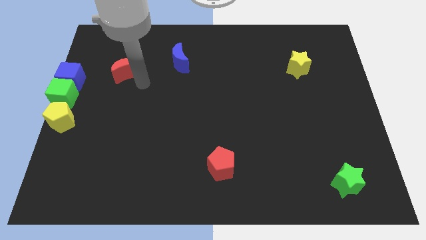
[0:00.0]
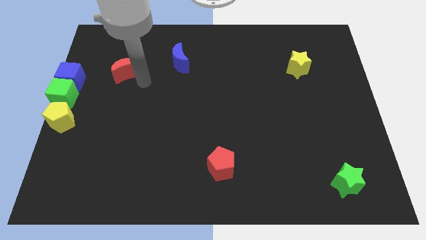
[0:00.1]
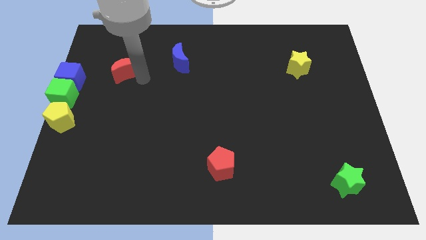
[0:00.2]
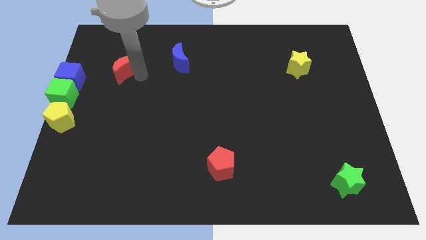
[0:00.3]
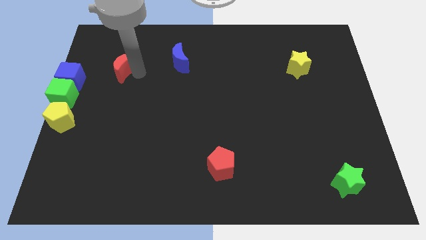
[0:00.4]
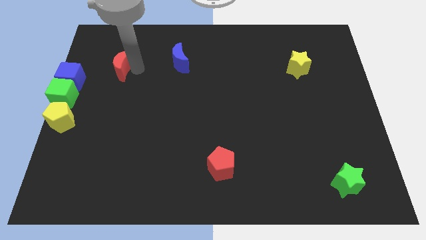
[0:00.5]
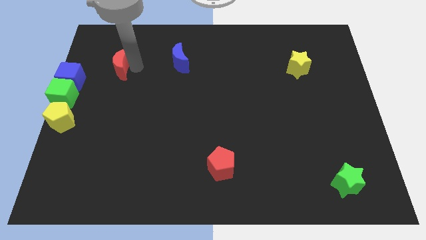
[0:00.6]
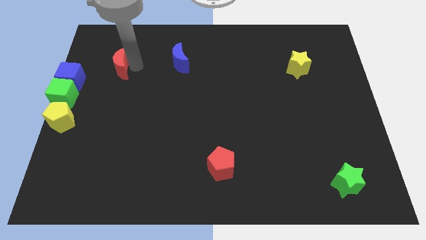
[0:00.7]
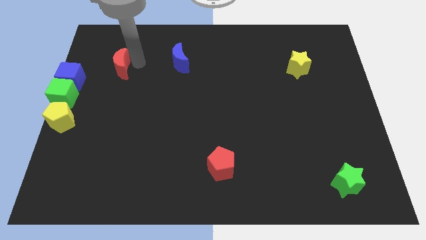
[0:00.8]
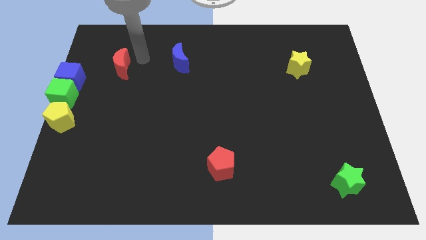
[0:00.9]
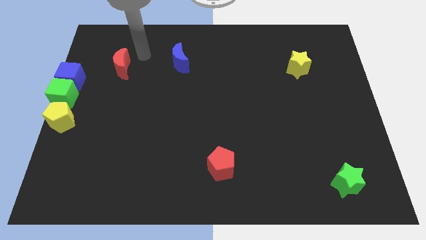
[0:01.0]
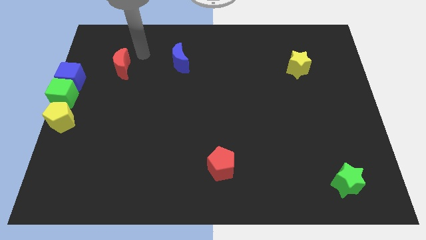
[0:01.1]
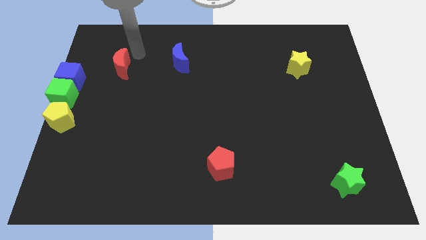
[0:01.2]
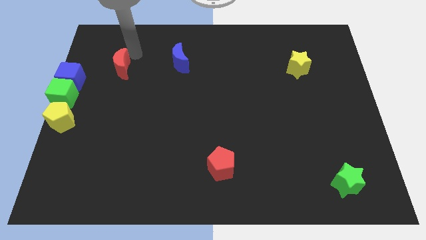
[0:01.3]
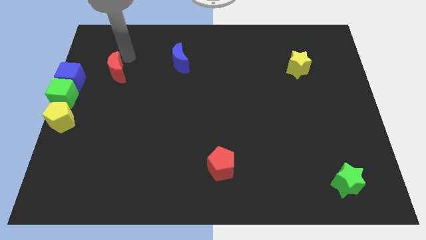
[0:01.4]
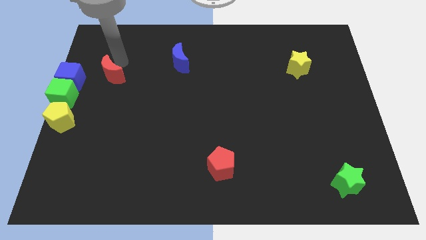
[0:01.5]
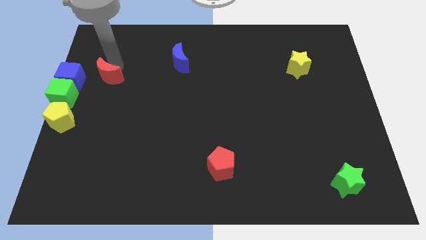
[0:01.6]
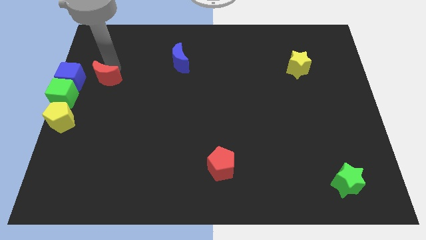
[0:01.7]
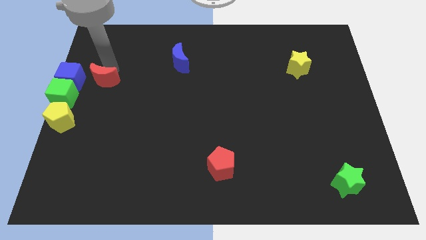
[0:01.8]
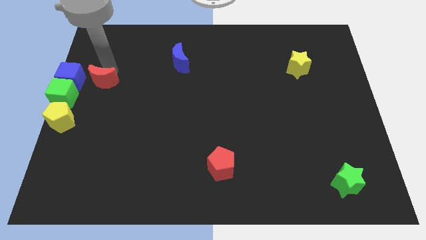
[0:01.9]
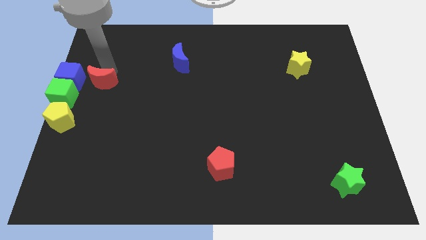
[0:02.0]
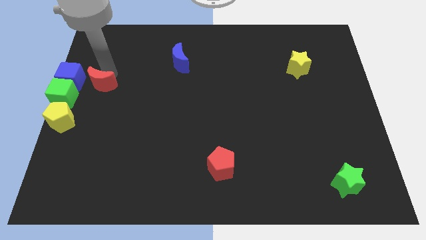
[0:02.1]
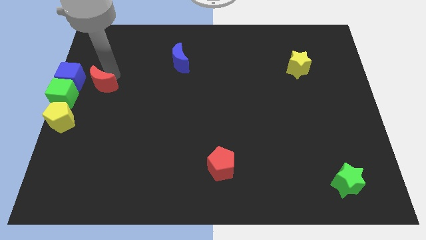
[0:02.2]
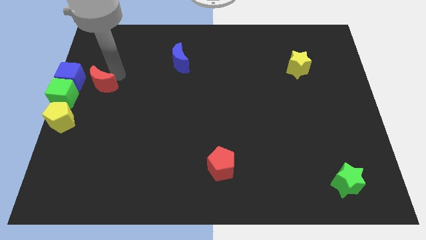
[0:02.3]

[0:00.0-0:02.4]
move red crescent to the right of blue cube

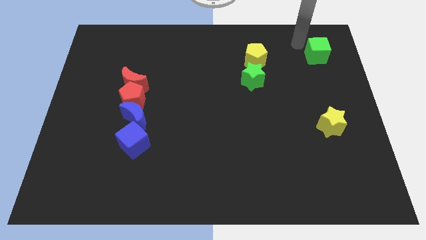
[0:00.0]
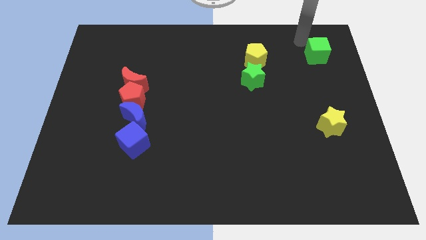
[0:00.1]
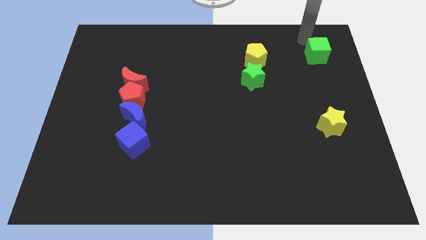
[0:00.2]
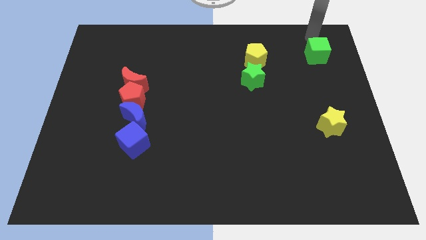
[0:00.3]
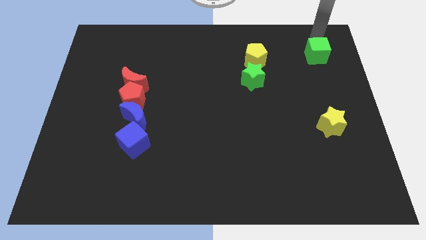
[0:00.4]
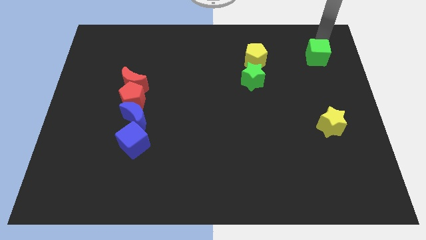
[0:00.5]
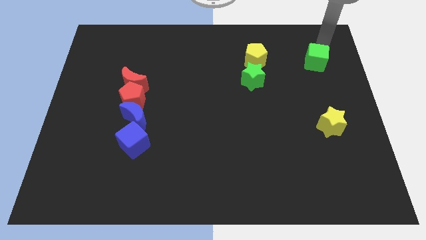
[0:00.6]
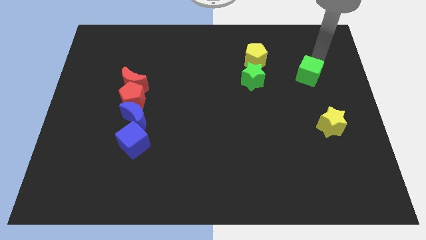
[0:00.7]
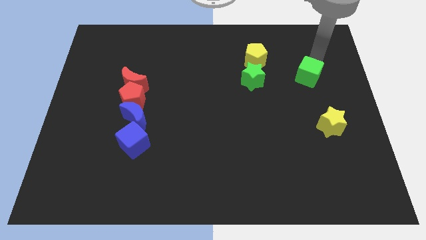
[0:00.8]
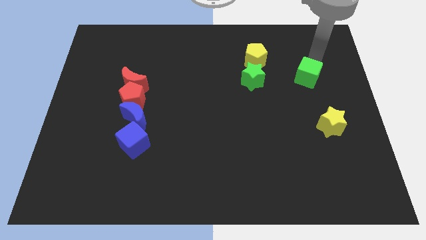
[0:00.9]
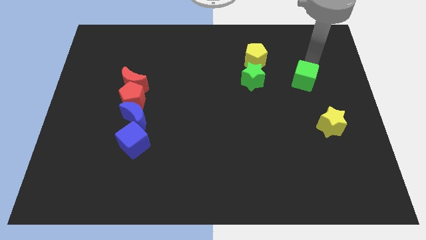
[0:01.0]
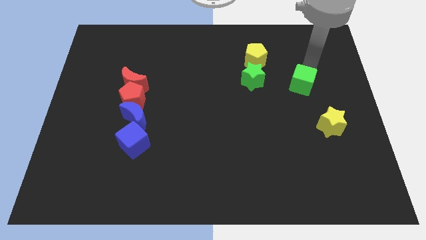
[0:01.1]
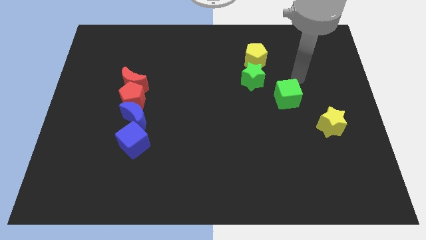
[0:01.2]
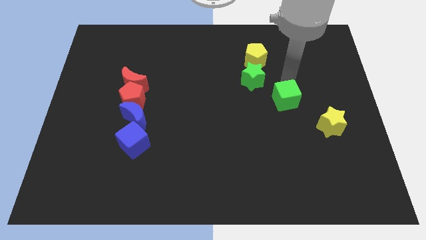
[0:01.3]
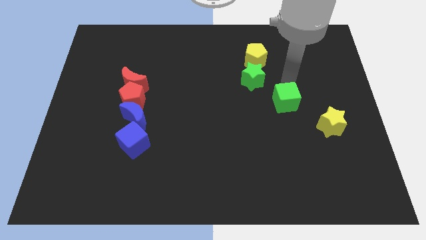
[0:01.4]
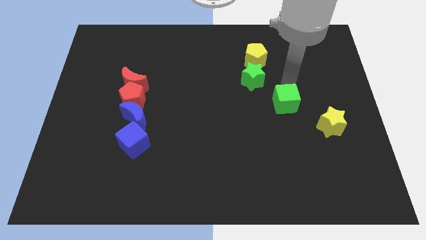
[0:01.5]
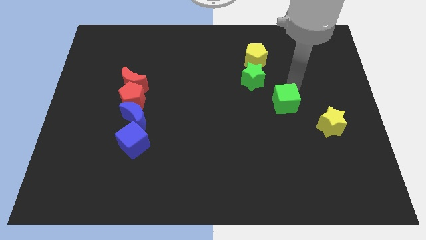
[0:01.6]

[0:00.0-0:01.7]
move the green cube in between green star and yellow star

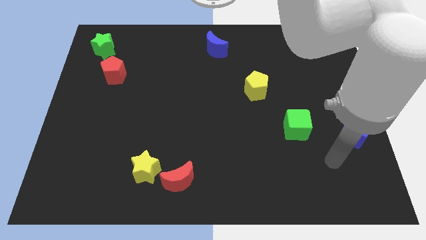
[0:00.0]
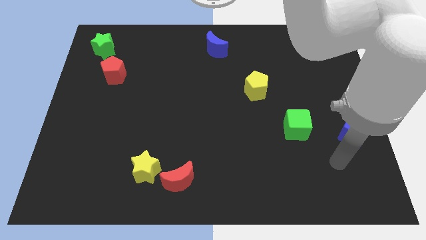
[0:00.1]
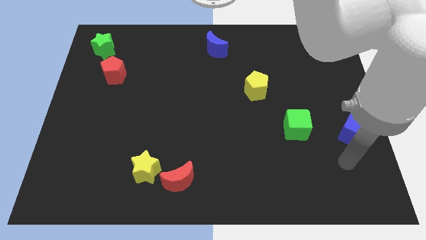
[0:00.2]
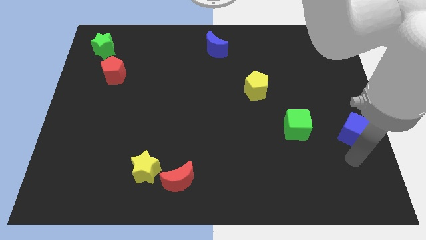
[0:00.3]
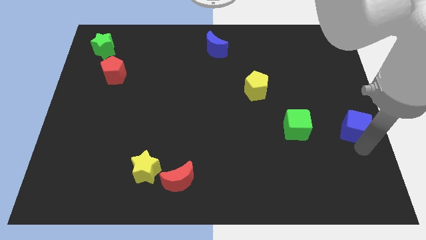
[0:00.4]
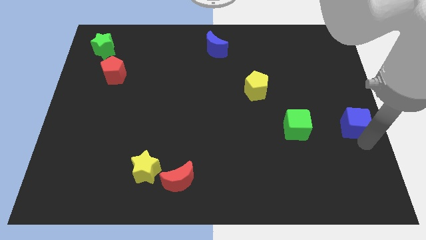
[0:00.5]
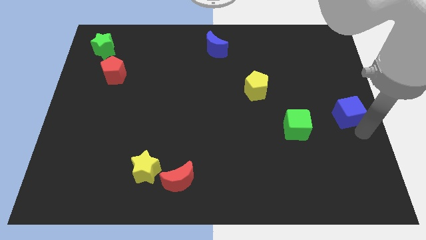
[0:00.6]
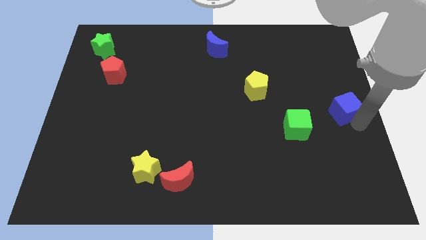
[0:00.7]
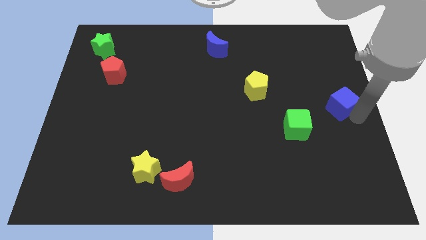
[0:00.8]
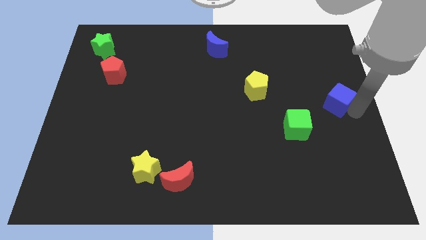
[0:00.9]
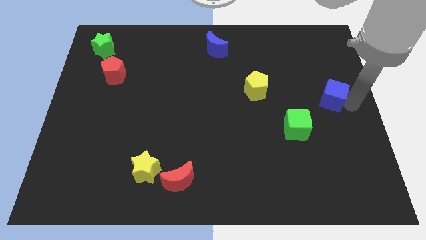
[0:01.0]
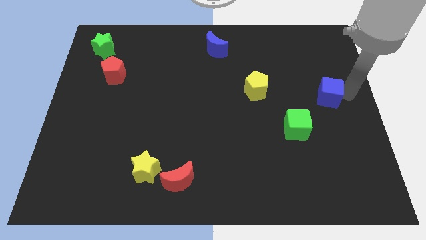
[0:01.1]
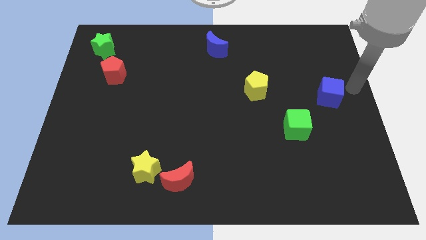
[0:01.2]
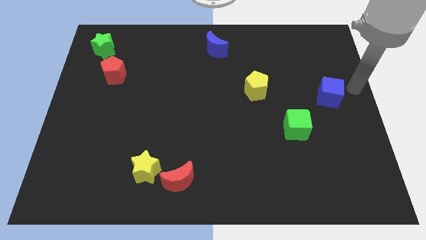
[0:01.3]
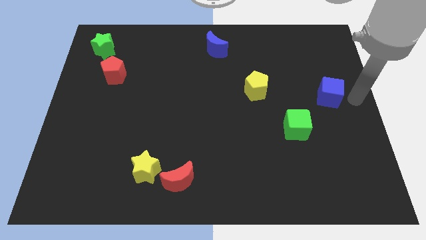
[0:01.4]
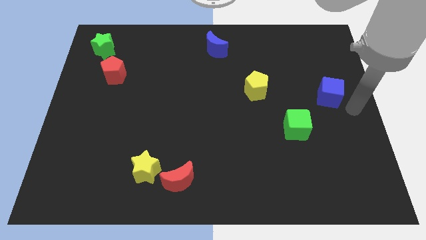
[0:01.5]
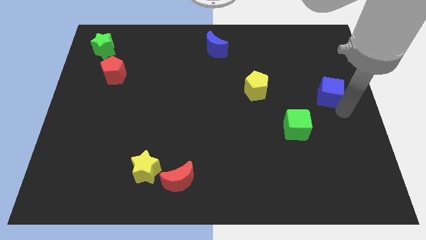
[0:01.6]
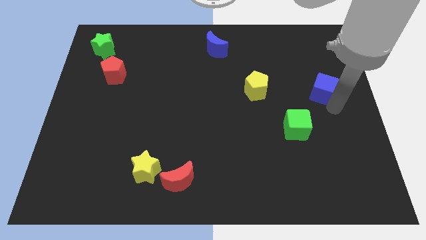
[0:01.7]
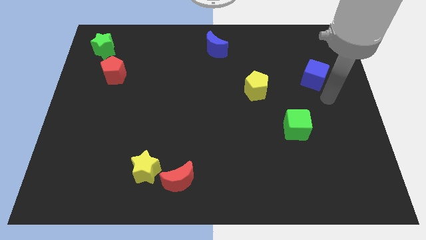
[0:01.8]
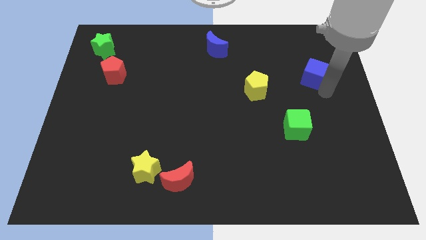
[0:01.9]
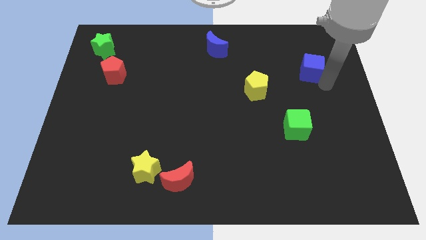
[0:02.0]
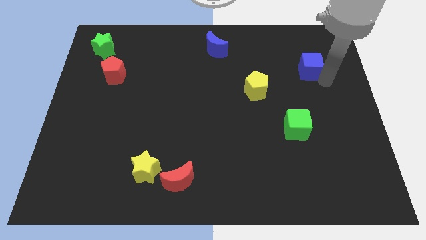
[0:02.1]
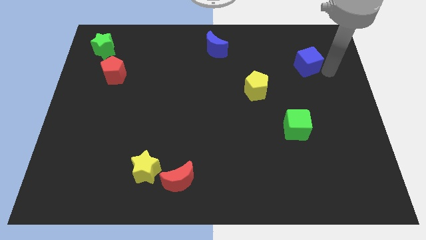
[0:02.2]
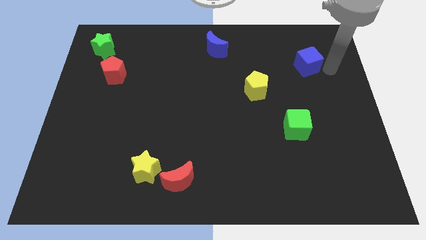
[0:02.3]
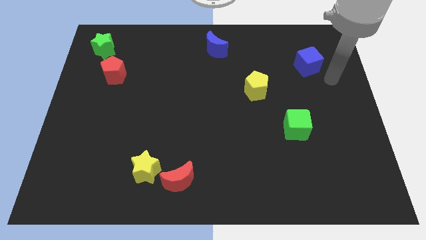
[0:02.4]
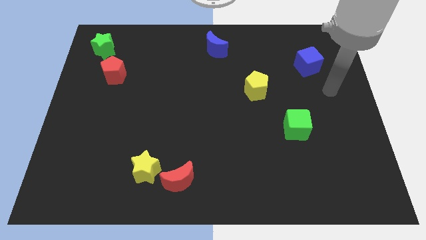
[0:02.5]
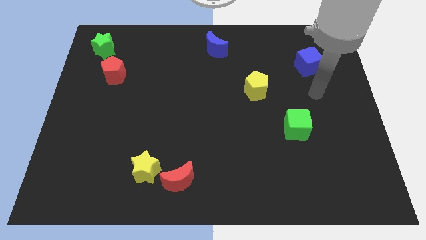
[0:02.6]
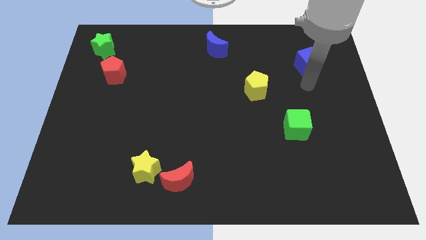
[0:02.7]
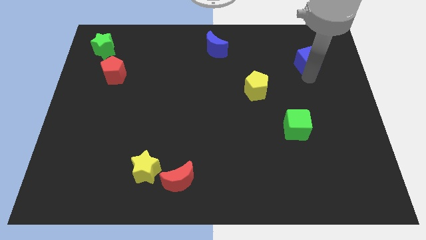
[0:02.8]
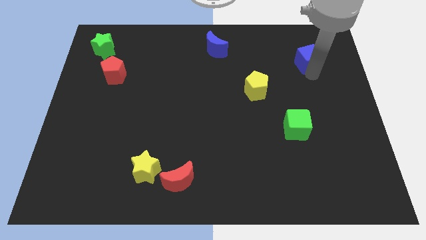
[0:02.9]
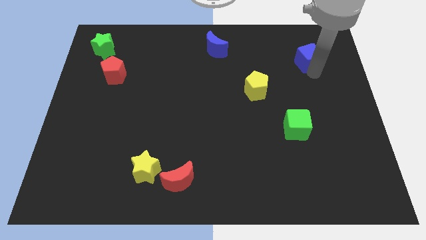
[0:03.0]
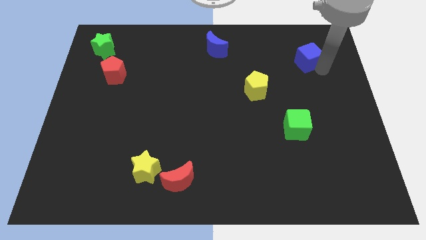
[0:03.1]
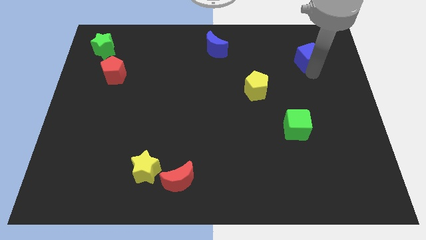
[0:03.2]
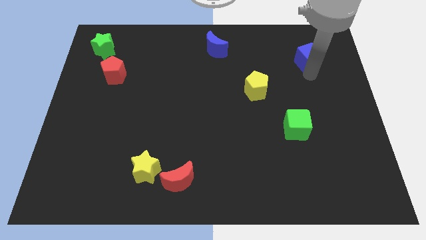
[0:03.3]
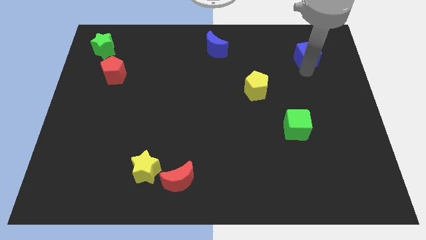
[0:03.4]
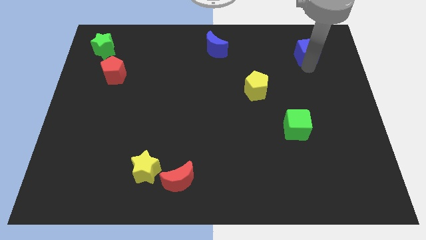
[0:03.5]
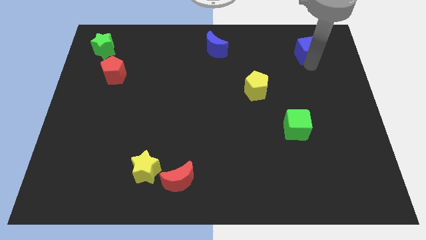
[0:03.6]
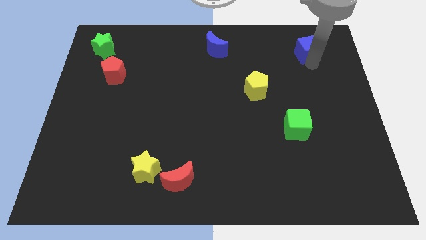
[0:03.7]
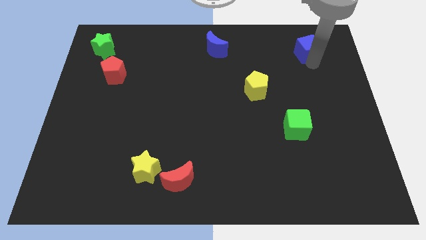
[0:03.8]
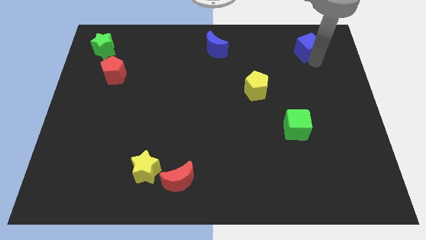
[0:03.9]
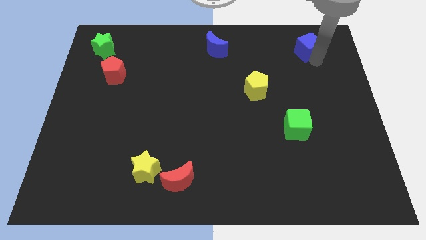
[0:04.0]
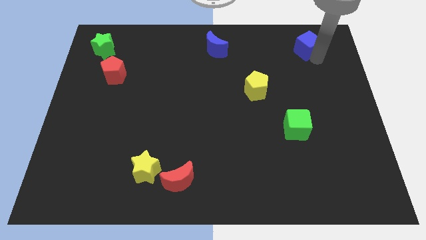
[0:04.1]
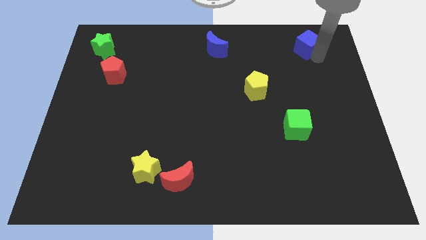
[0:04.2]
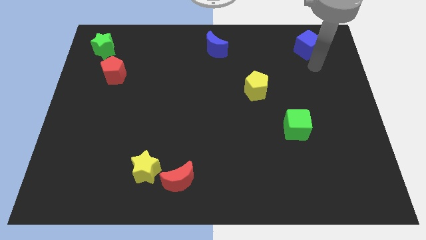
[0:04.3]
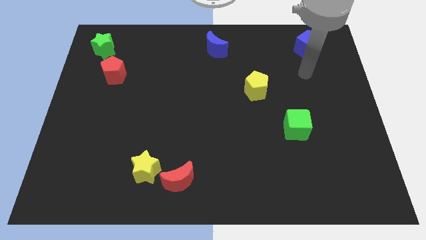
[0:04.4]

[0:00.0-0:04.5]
push the blue cube to the top right
